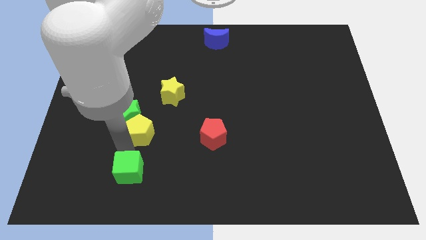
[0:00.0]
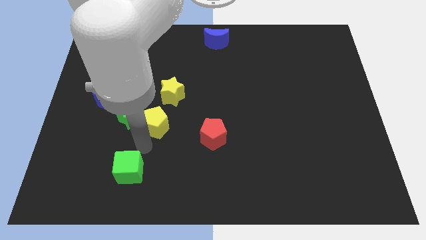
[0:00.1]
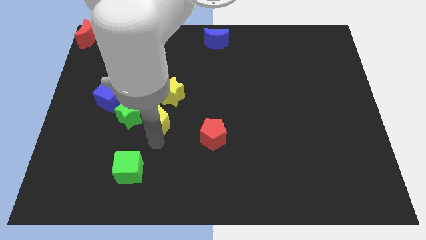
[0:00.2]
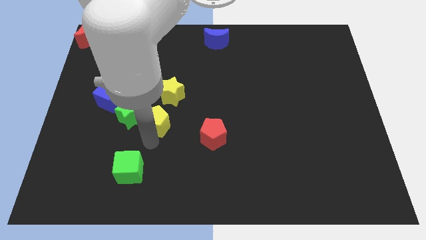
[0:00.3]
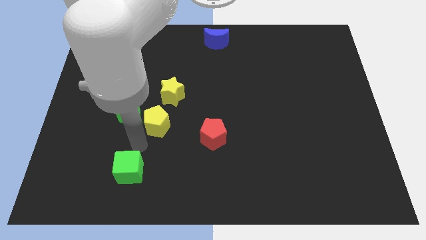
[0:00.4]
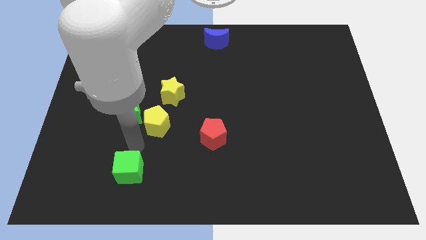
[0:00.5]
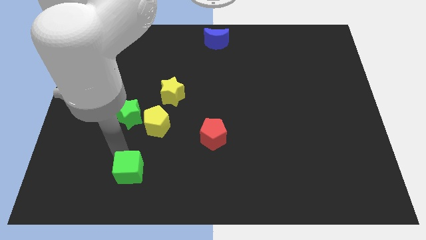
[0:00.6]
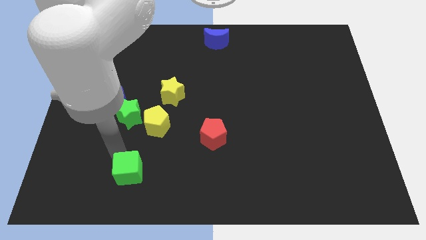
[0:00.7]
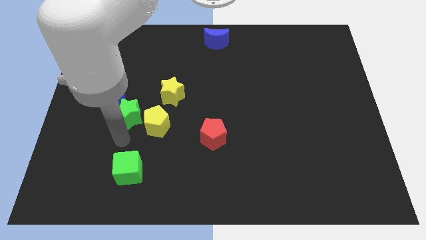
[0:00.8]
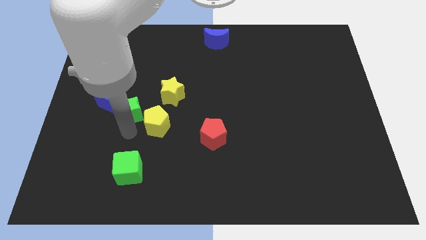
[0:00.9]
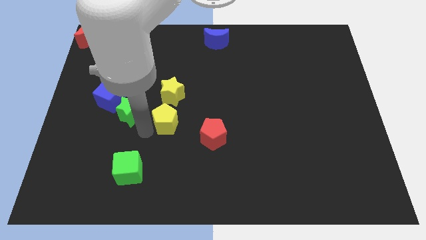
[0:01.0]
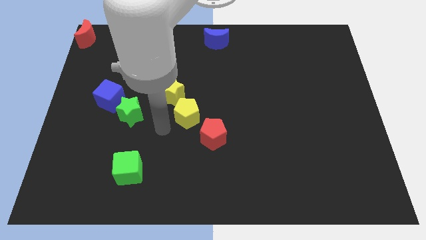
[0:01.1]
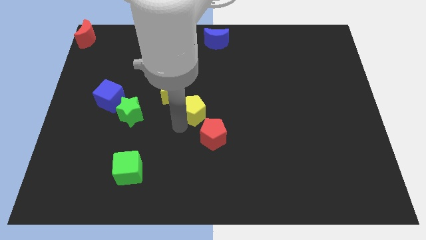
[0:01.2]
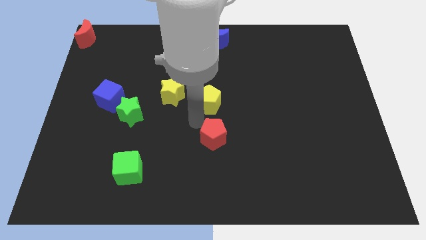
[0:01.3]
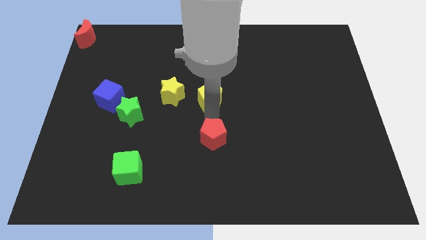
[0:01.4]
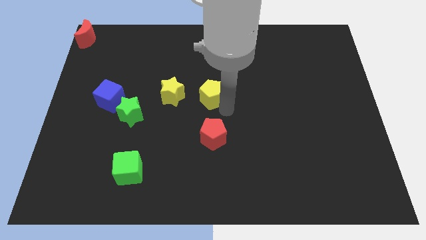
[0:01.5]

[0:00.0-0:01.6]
move the yellow pentagon to the center of the board

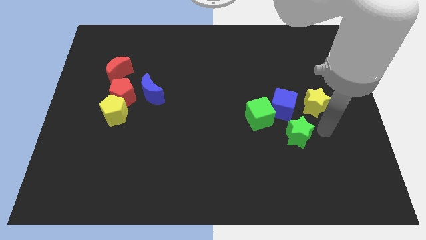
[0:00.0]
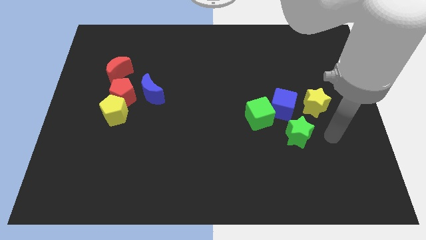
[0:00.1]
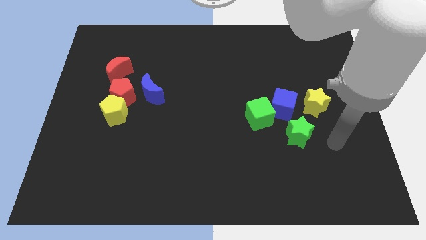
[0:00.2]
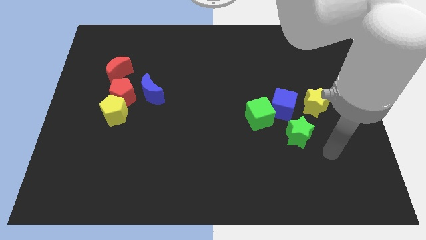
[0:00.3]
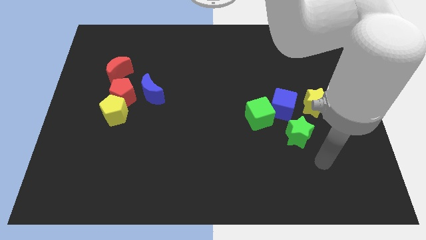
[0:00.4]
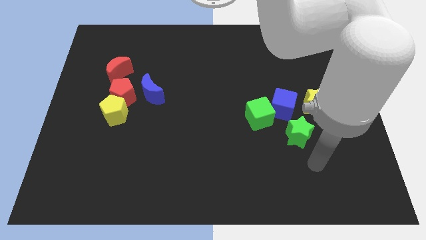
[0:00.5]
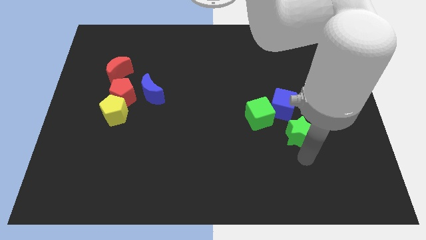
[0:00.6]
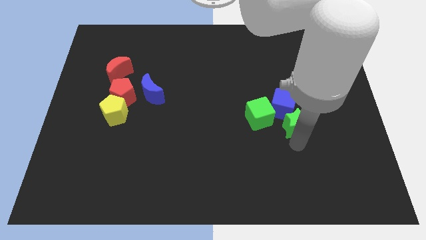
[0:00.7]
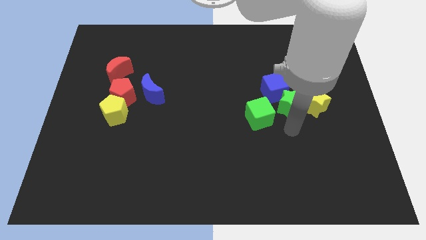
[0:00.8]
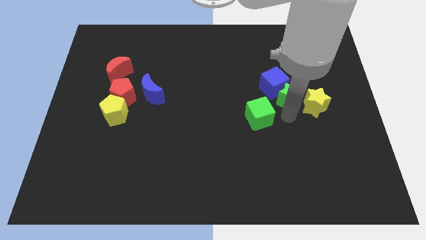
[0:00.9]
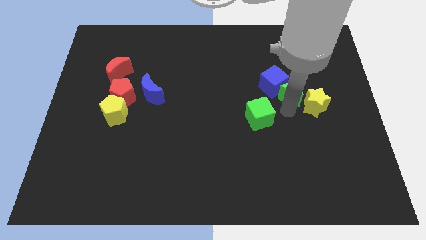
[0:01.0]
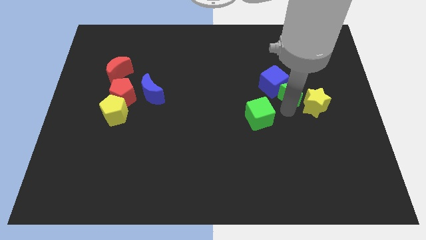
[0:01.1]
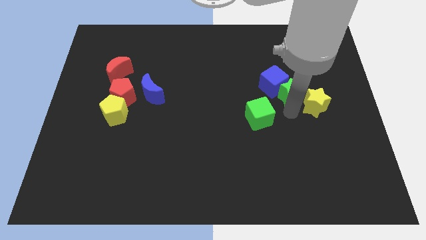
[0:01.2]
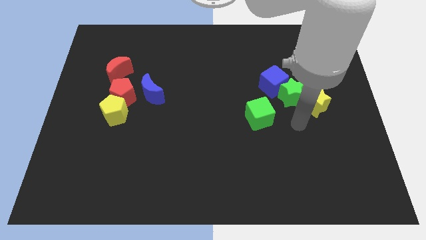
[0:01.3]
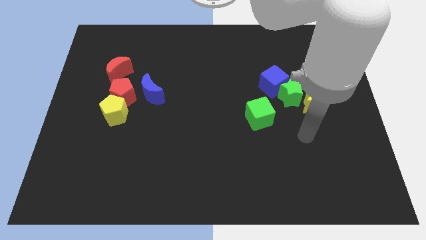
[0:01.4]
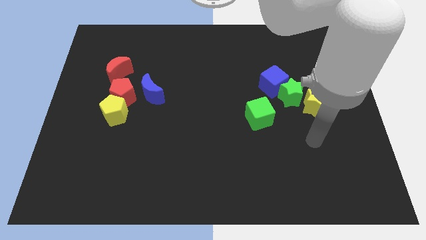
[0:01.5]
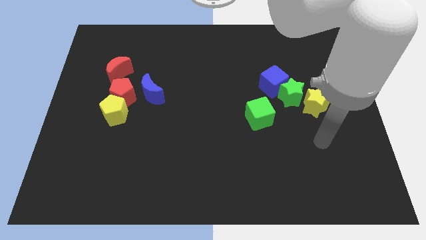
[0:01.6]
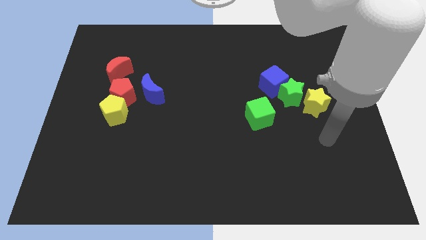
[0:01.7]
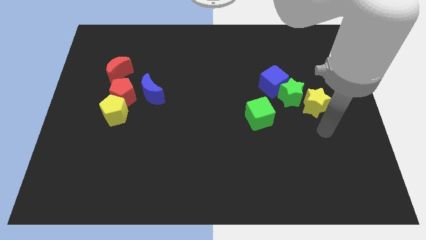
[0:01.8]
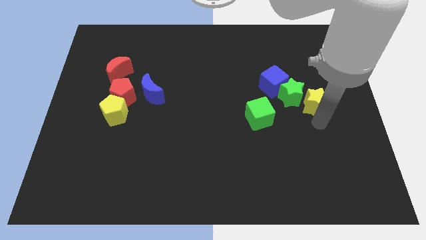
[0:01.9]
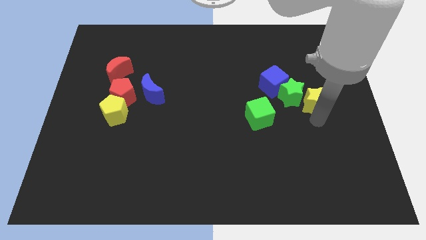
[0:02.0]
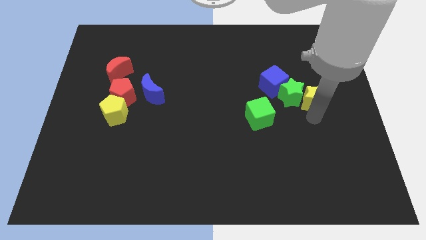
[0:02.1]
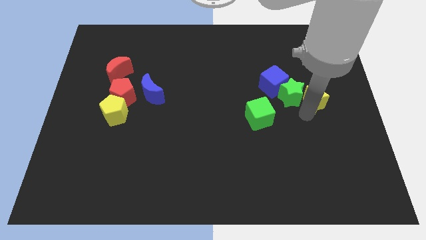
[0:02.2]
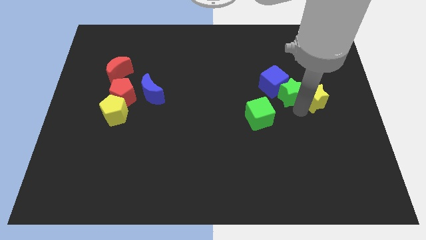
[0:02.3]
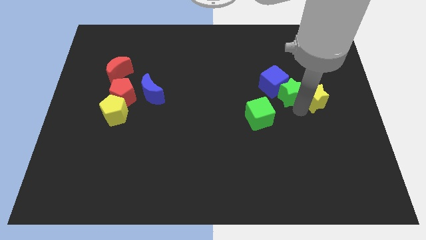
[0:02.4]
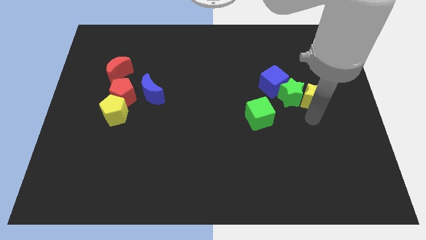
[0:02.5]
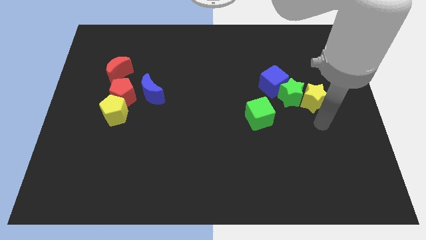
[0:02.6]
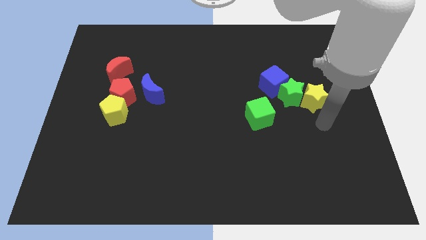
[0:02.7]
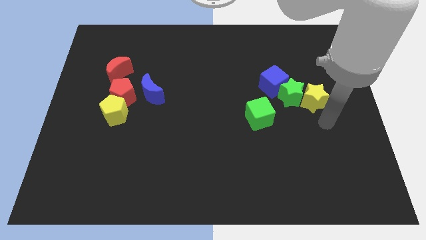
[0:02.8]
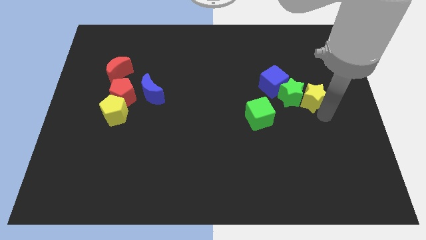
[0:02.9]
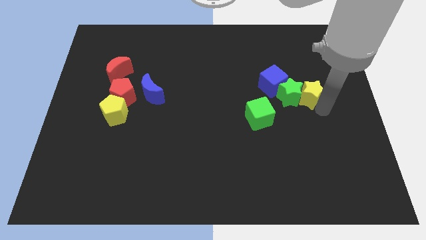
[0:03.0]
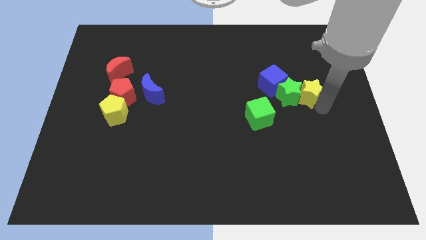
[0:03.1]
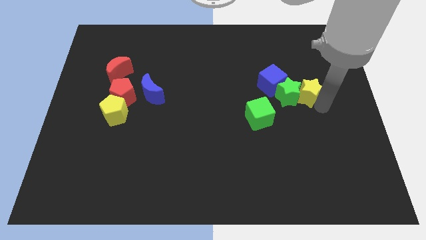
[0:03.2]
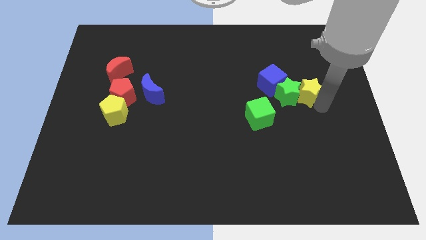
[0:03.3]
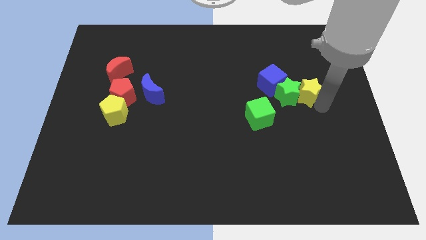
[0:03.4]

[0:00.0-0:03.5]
drag the stars along with blue cube towards top

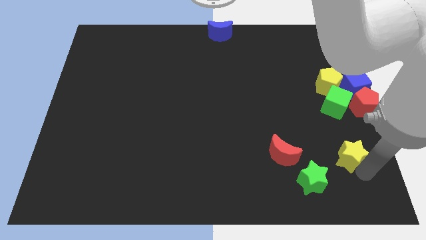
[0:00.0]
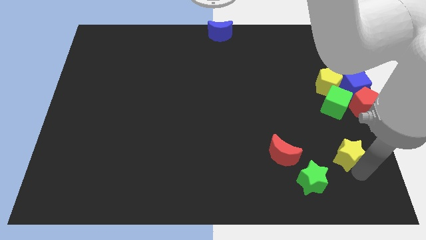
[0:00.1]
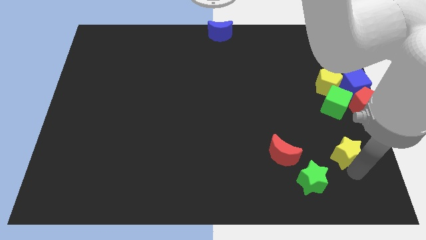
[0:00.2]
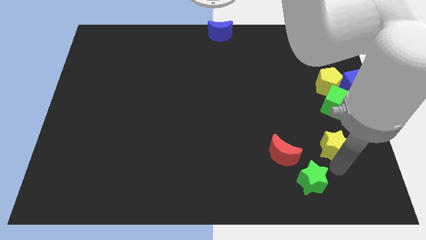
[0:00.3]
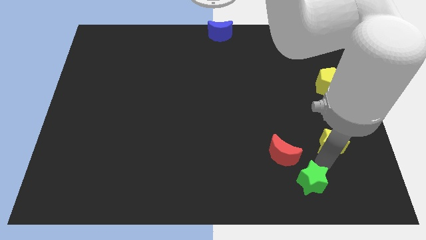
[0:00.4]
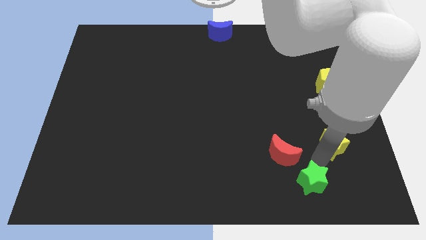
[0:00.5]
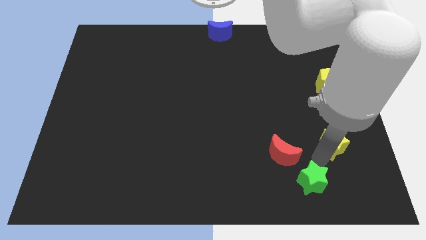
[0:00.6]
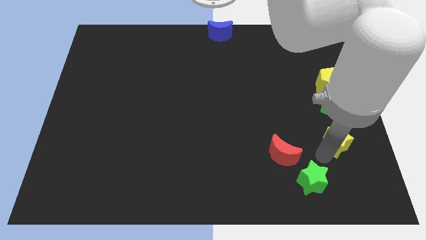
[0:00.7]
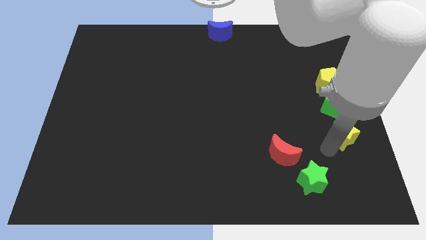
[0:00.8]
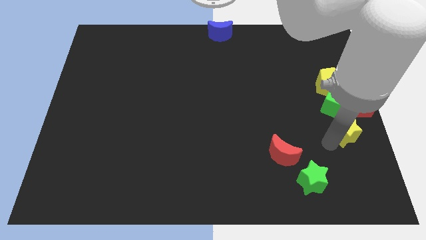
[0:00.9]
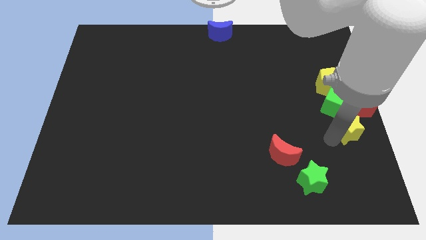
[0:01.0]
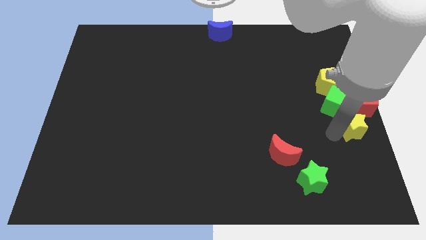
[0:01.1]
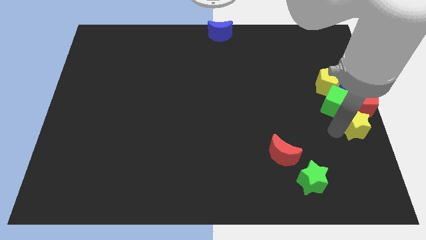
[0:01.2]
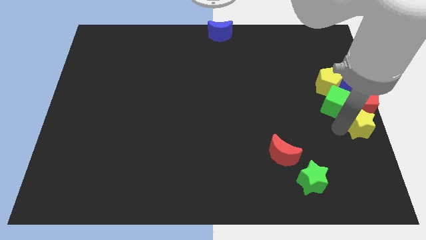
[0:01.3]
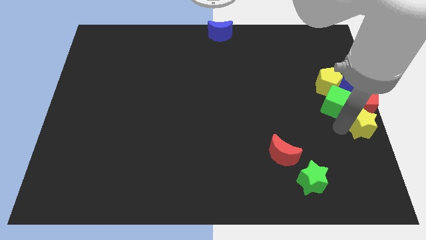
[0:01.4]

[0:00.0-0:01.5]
push yellow star below red pentagon

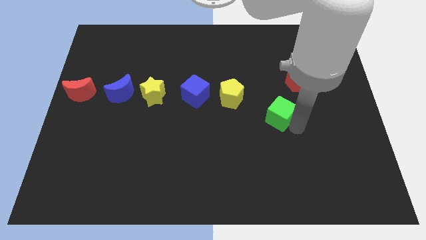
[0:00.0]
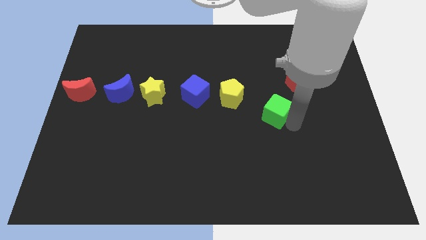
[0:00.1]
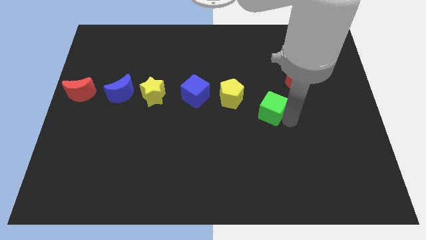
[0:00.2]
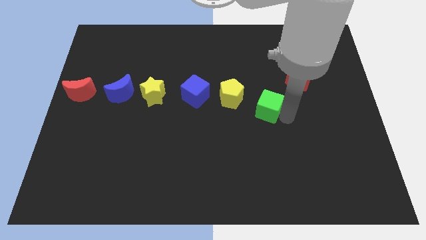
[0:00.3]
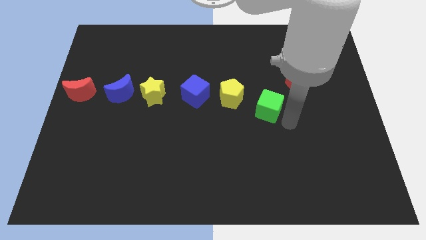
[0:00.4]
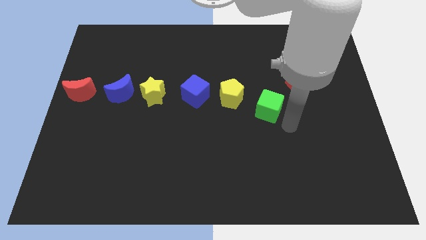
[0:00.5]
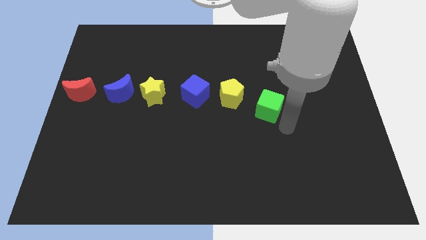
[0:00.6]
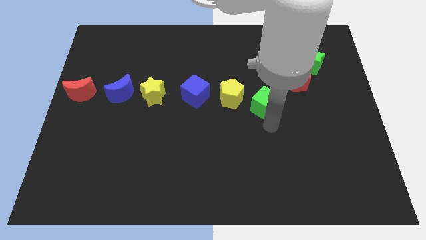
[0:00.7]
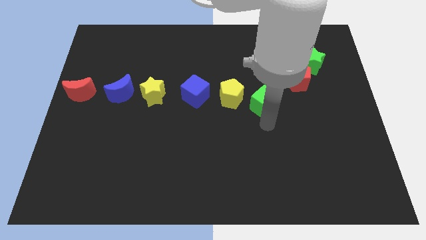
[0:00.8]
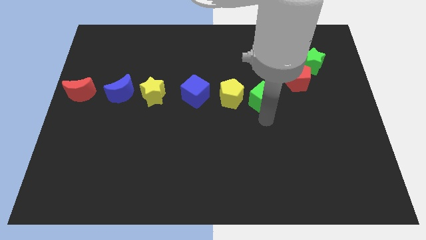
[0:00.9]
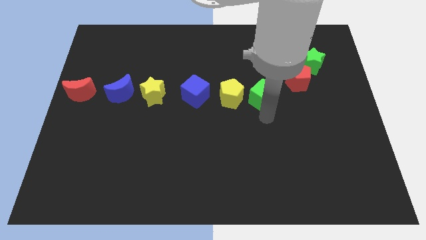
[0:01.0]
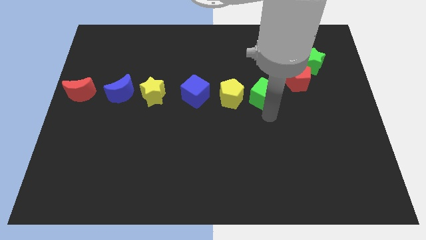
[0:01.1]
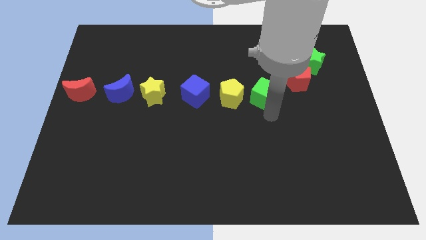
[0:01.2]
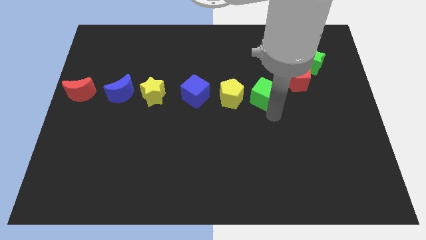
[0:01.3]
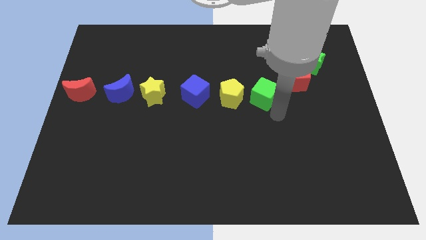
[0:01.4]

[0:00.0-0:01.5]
place the green cube beside the yellow pentagon

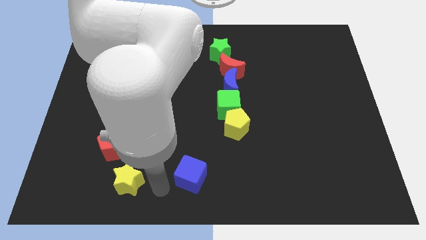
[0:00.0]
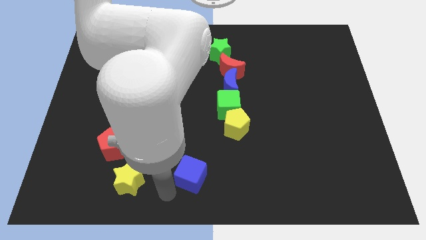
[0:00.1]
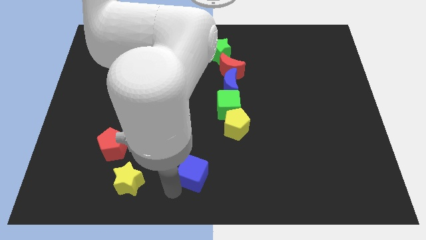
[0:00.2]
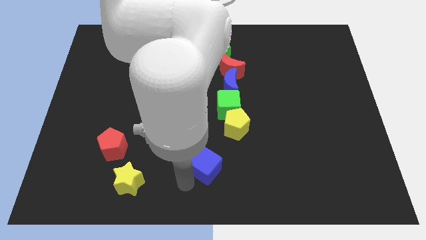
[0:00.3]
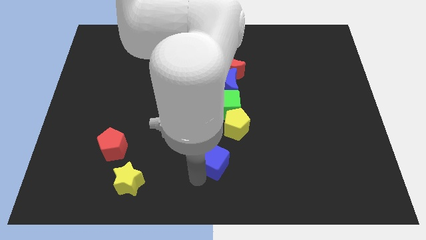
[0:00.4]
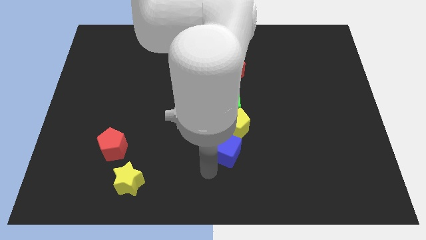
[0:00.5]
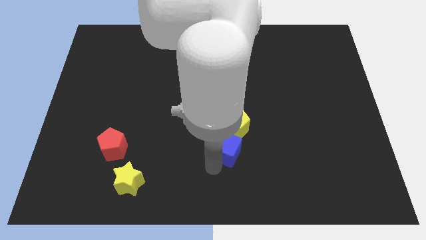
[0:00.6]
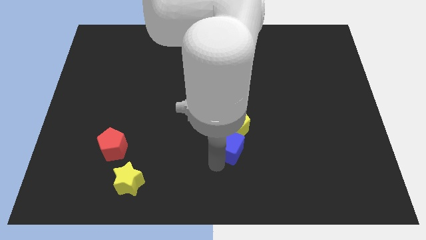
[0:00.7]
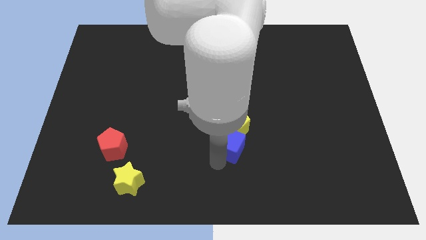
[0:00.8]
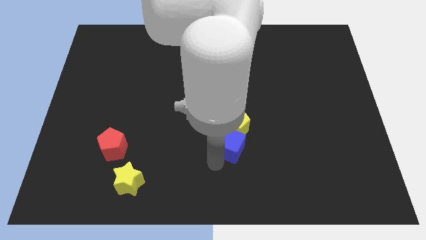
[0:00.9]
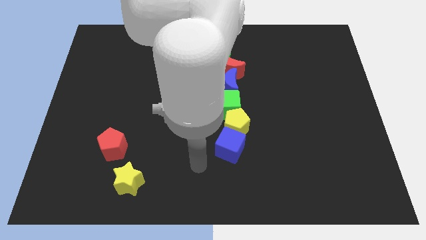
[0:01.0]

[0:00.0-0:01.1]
slide blue cube into yellow pentagon
